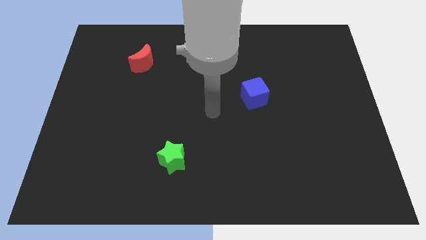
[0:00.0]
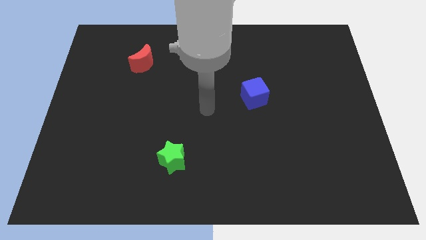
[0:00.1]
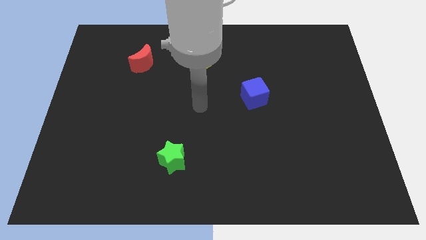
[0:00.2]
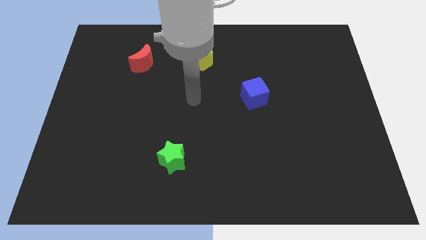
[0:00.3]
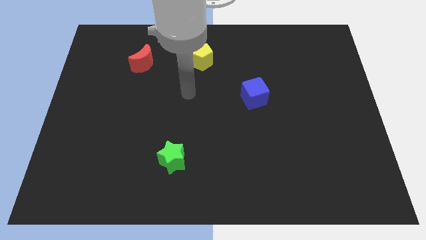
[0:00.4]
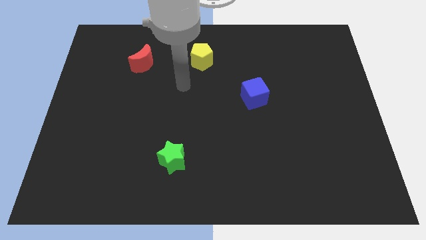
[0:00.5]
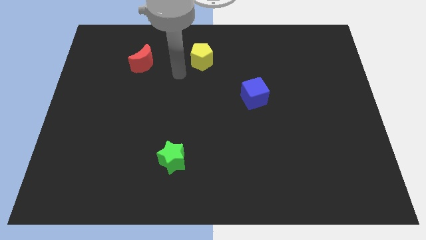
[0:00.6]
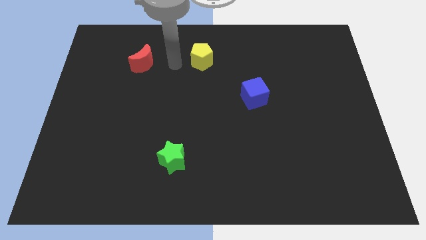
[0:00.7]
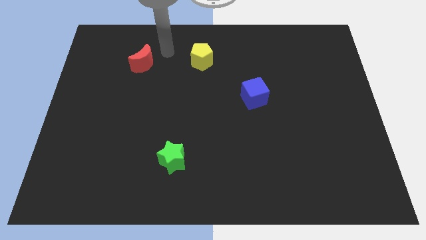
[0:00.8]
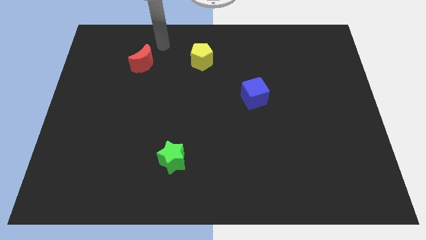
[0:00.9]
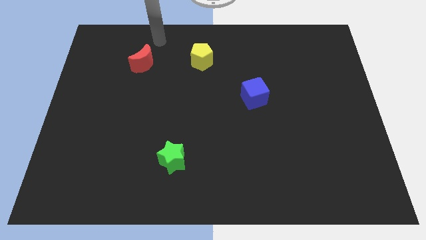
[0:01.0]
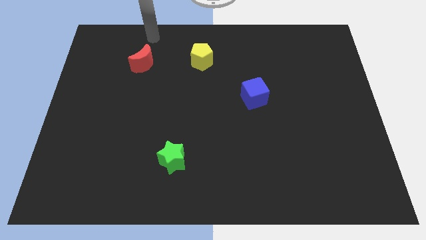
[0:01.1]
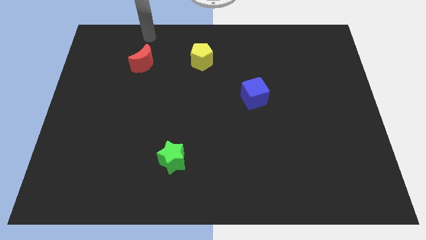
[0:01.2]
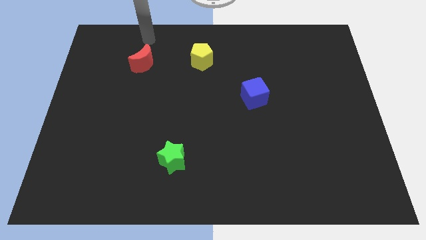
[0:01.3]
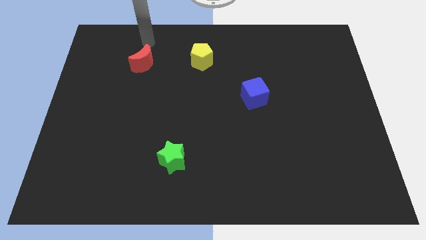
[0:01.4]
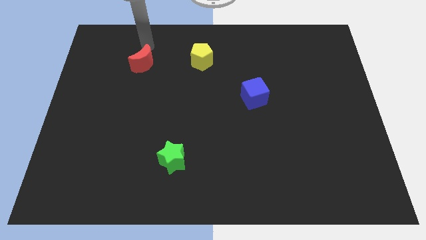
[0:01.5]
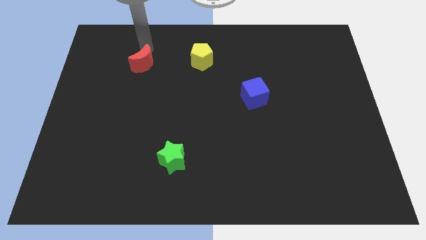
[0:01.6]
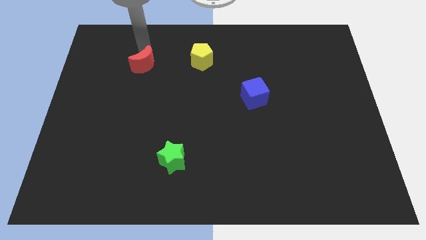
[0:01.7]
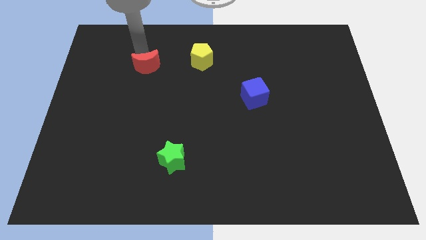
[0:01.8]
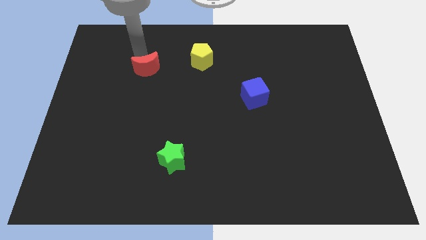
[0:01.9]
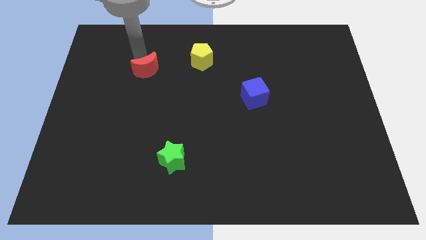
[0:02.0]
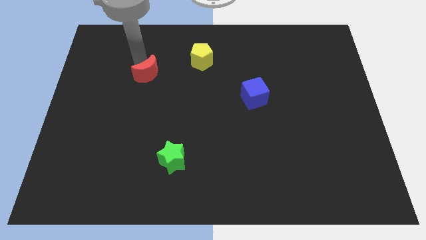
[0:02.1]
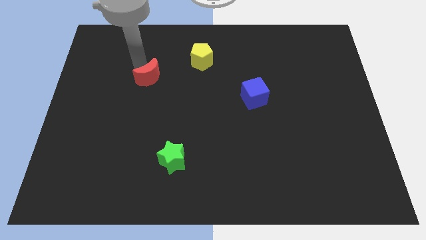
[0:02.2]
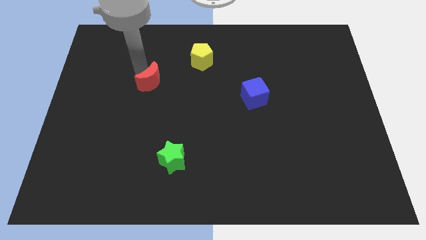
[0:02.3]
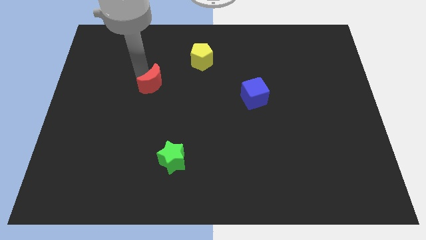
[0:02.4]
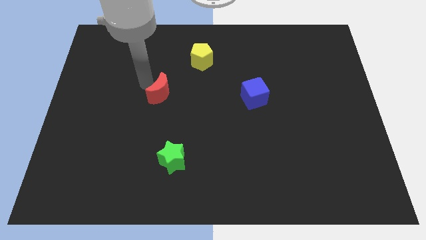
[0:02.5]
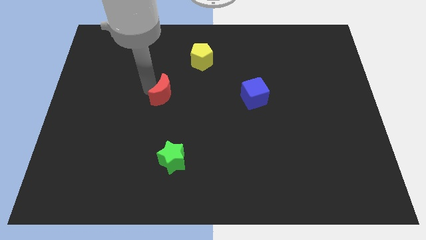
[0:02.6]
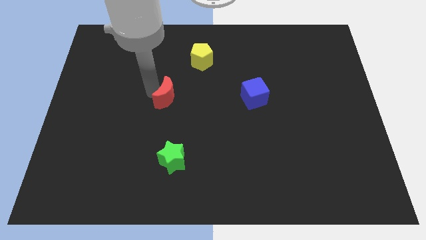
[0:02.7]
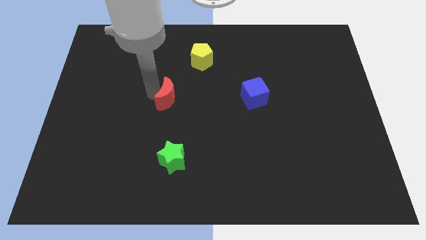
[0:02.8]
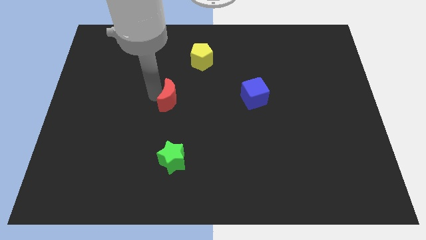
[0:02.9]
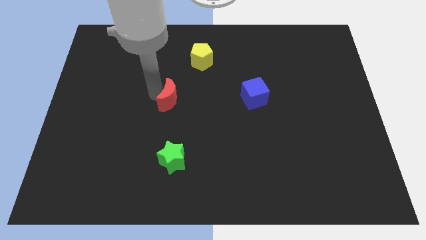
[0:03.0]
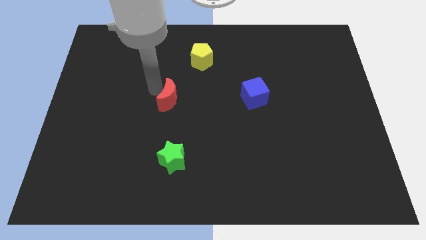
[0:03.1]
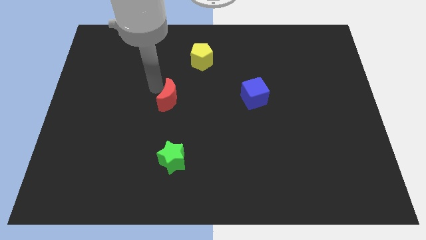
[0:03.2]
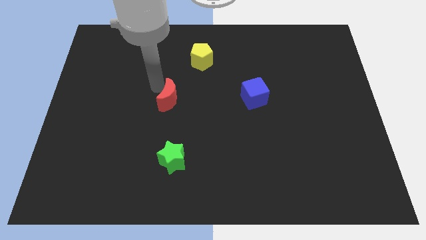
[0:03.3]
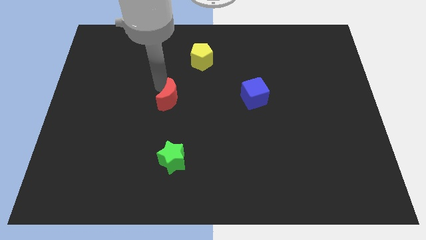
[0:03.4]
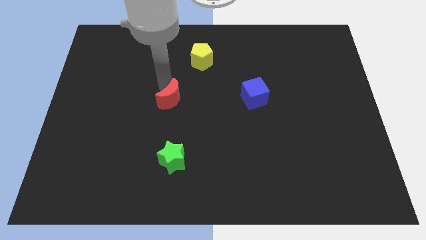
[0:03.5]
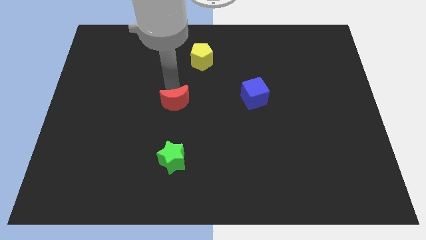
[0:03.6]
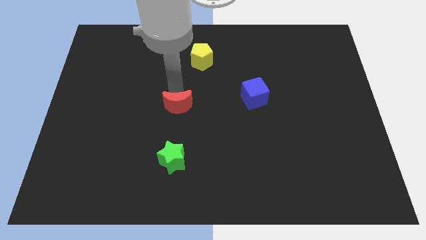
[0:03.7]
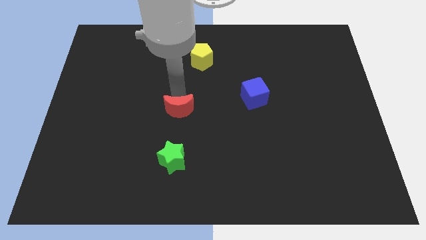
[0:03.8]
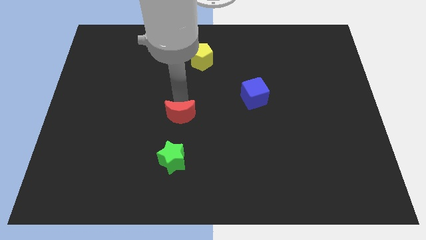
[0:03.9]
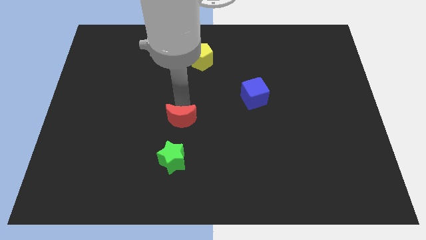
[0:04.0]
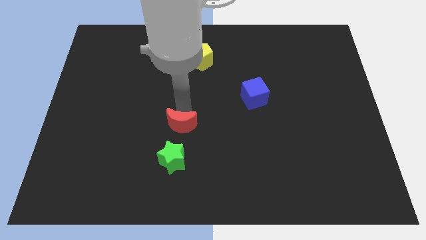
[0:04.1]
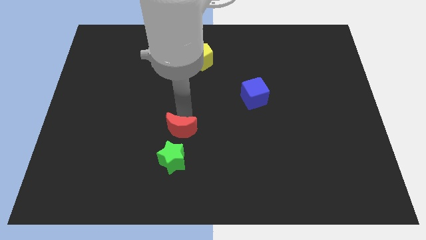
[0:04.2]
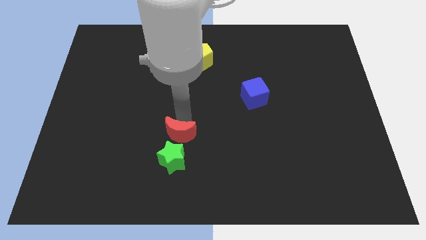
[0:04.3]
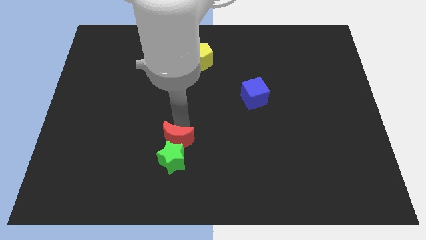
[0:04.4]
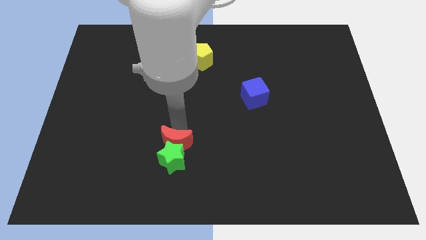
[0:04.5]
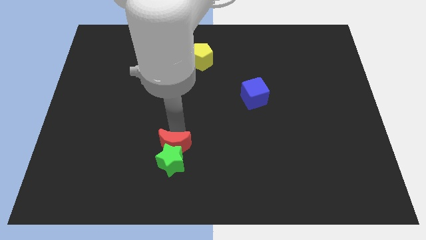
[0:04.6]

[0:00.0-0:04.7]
put the red block to the green star

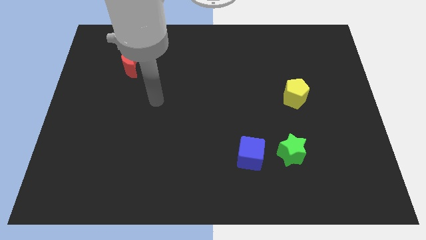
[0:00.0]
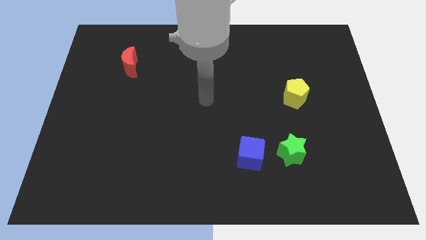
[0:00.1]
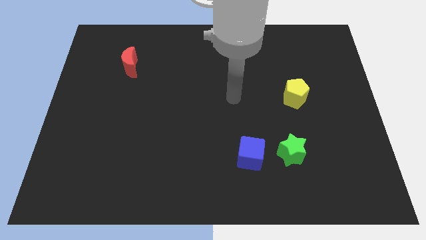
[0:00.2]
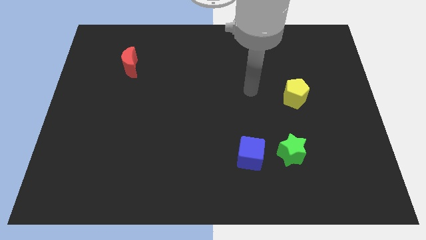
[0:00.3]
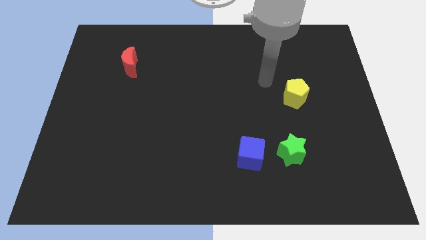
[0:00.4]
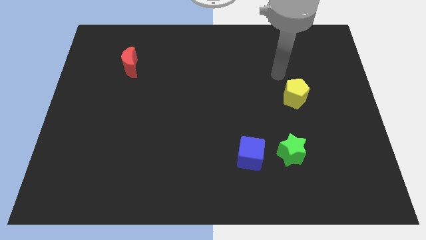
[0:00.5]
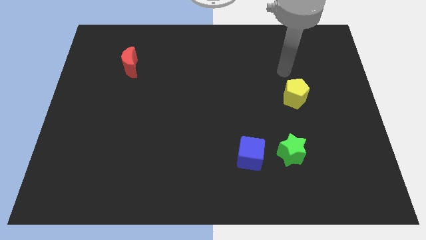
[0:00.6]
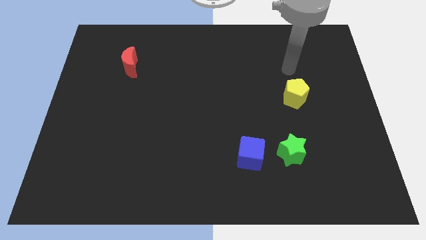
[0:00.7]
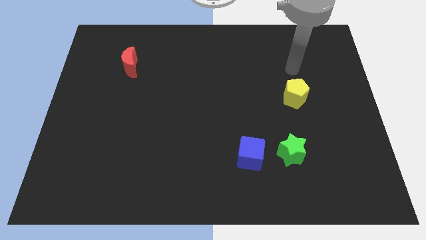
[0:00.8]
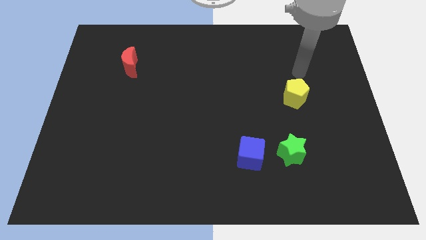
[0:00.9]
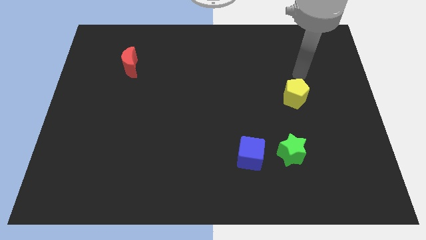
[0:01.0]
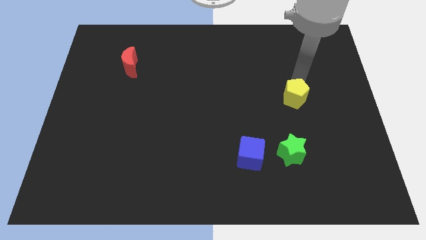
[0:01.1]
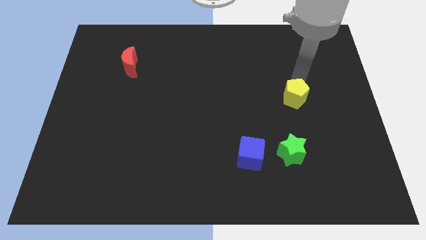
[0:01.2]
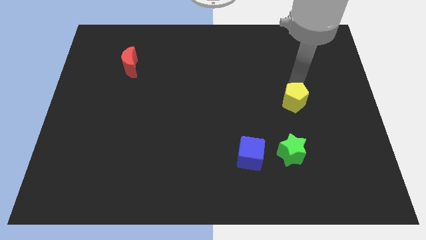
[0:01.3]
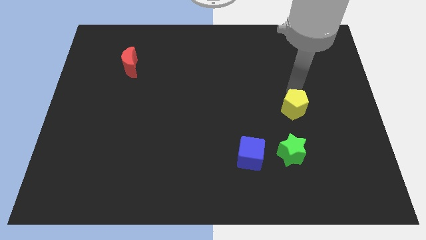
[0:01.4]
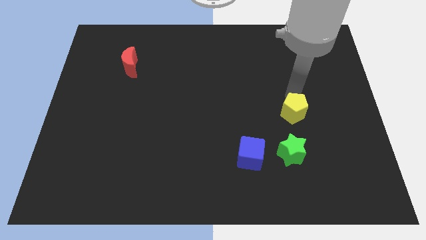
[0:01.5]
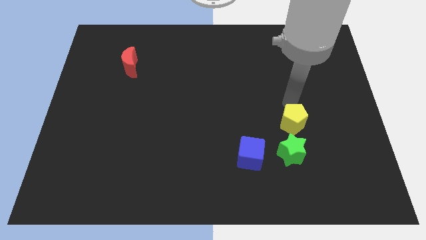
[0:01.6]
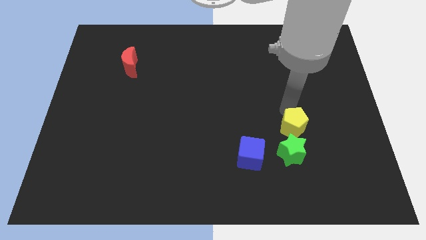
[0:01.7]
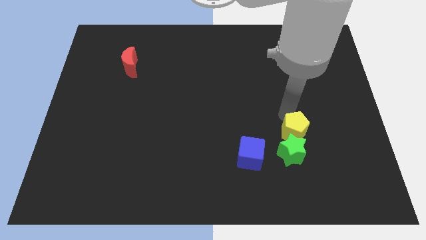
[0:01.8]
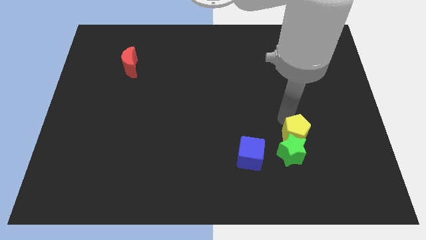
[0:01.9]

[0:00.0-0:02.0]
push the yellow block next to the star

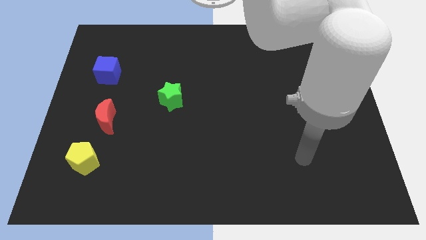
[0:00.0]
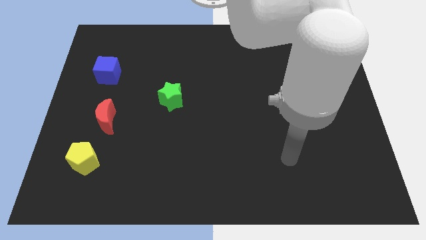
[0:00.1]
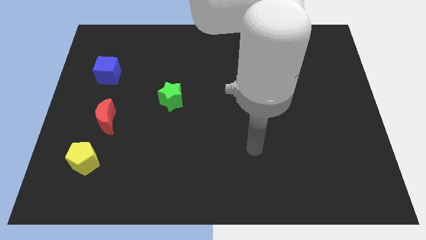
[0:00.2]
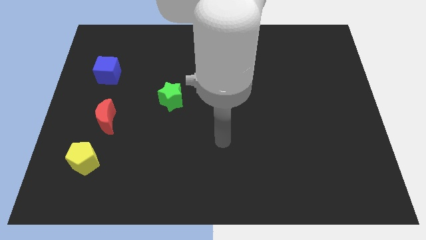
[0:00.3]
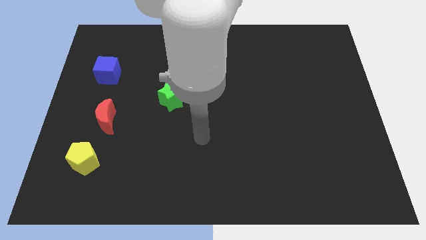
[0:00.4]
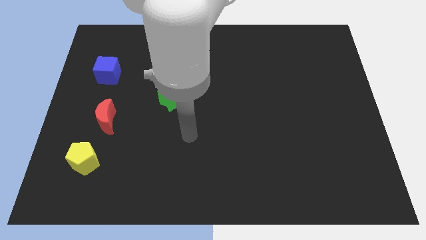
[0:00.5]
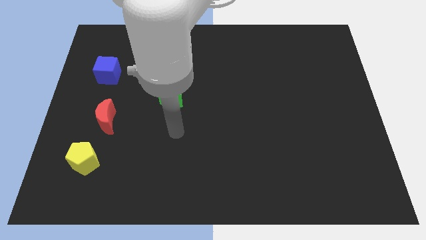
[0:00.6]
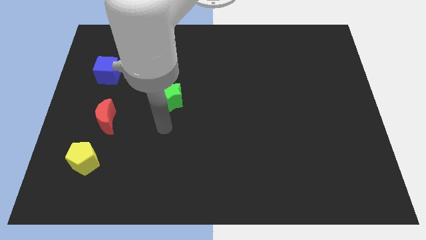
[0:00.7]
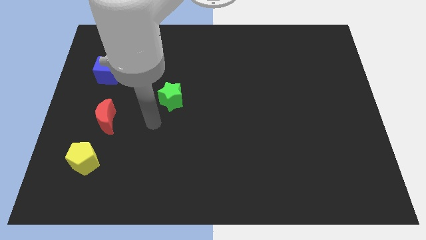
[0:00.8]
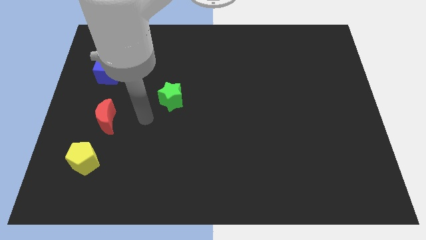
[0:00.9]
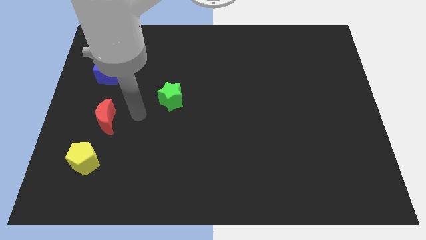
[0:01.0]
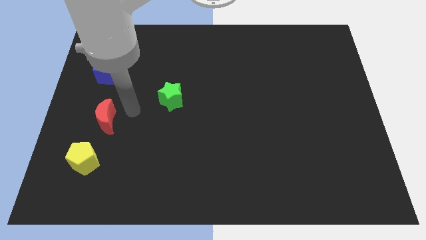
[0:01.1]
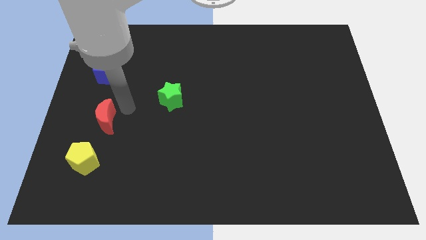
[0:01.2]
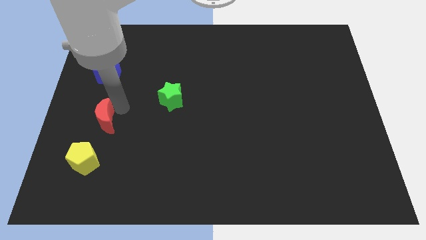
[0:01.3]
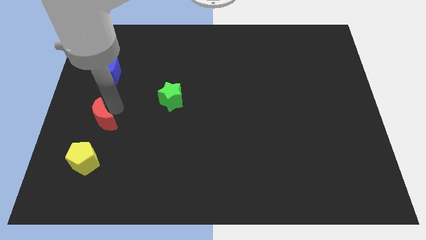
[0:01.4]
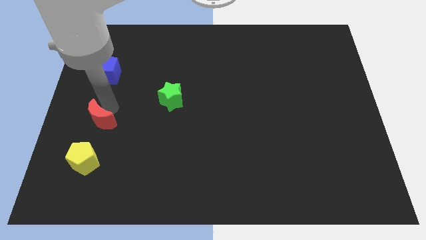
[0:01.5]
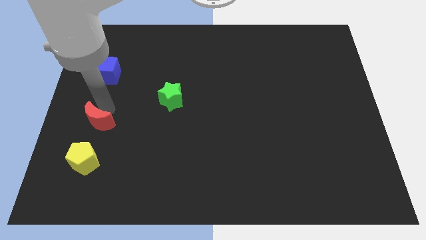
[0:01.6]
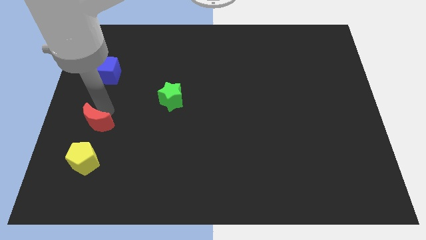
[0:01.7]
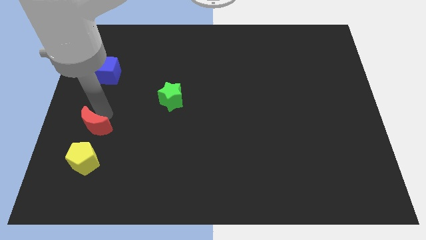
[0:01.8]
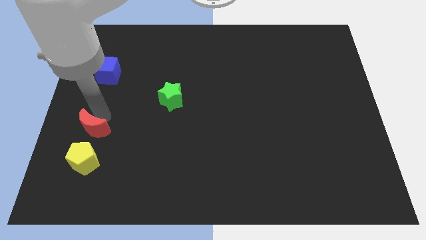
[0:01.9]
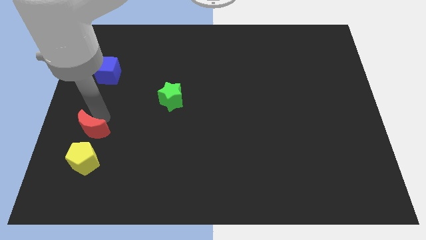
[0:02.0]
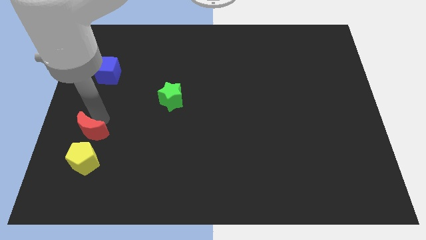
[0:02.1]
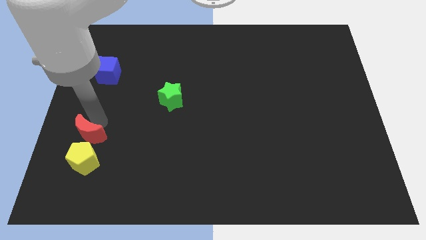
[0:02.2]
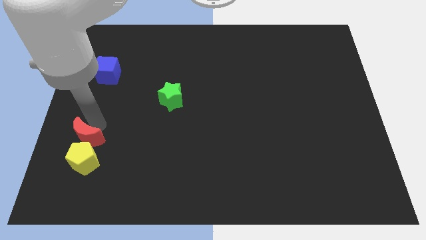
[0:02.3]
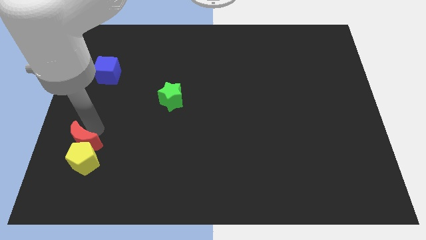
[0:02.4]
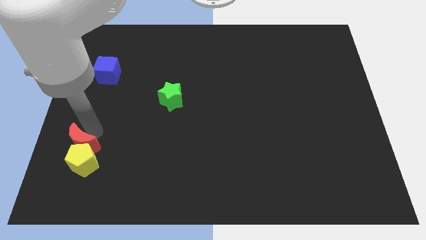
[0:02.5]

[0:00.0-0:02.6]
put the red block towards the yellow block
